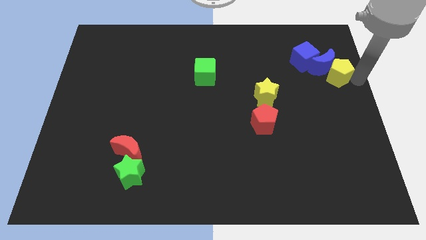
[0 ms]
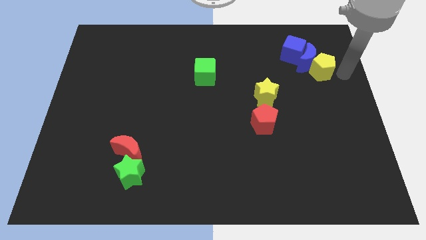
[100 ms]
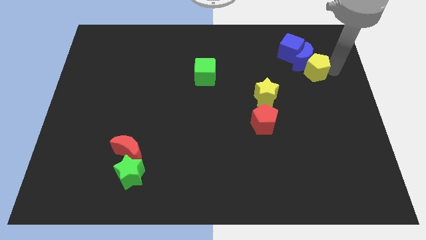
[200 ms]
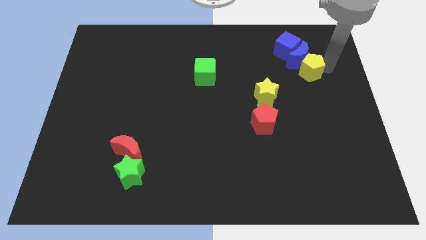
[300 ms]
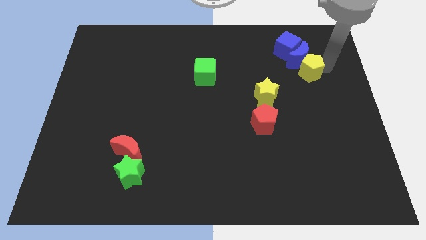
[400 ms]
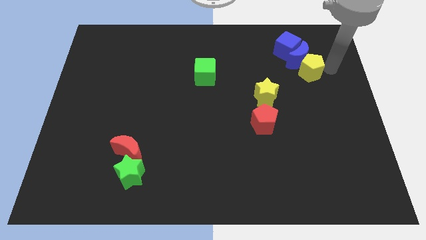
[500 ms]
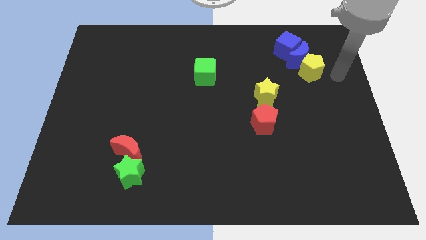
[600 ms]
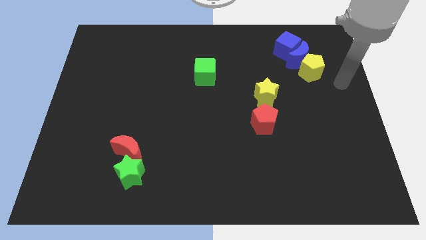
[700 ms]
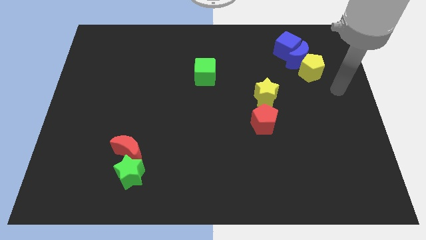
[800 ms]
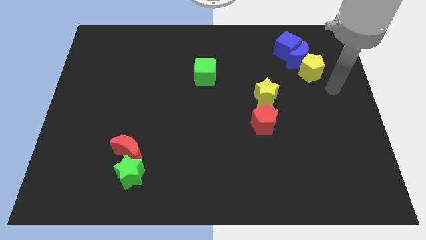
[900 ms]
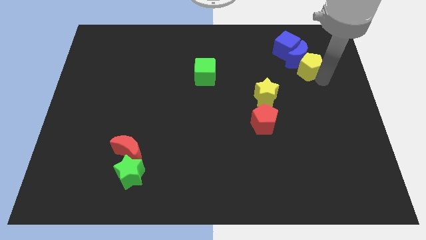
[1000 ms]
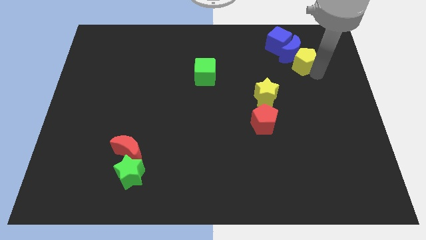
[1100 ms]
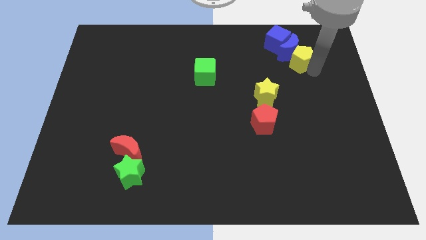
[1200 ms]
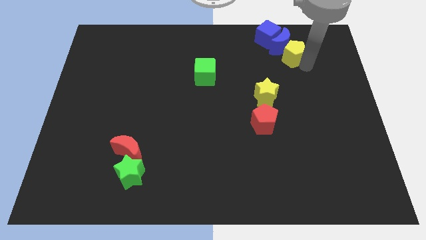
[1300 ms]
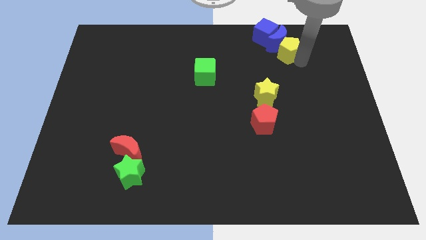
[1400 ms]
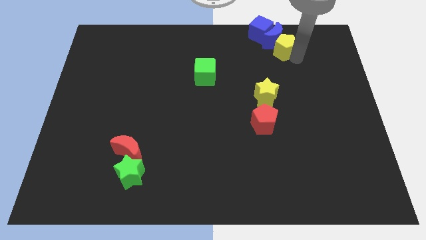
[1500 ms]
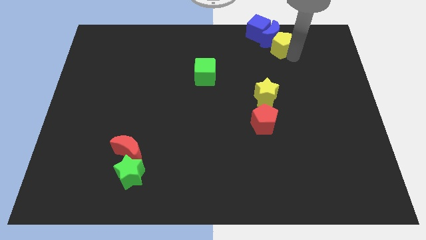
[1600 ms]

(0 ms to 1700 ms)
push the yellow pentagon into the blue crescent and blue cube towards the top

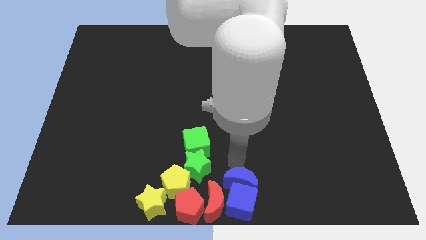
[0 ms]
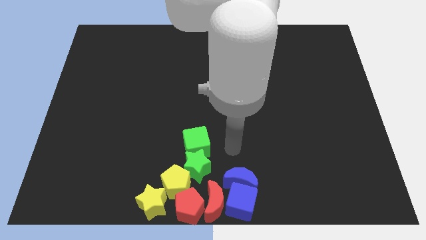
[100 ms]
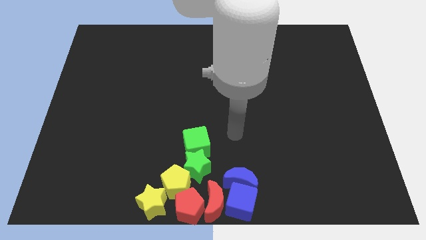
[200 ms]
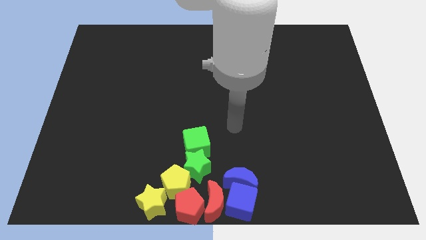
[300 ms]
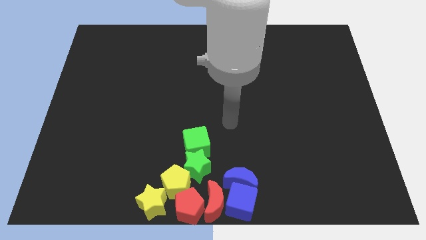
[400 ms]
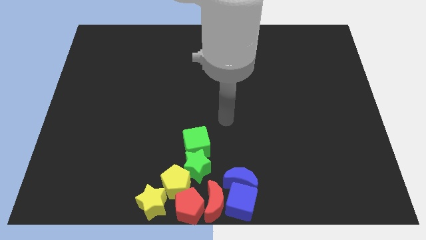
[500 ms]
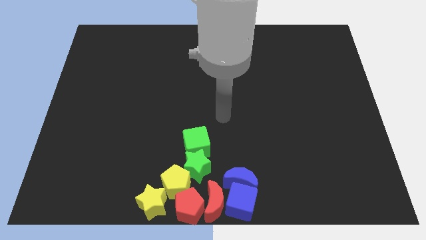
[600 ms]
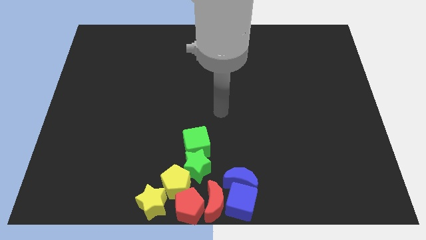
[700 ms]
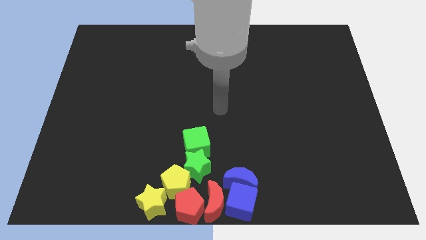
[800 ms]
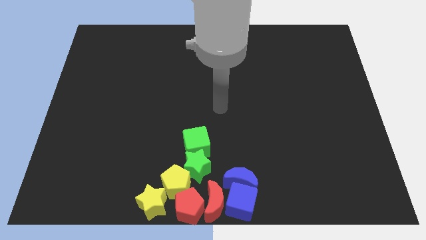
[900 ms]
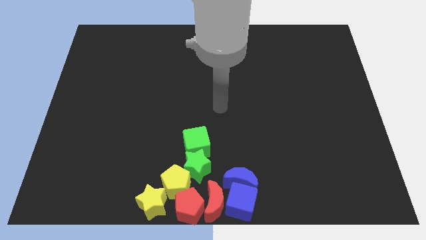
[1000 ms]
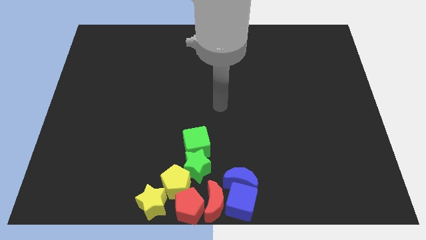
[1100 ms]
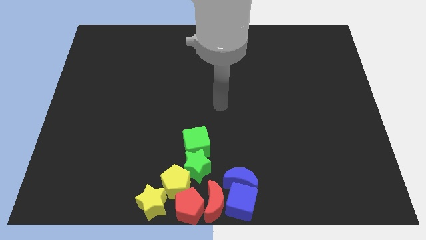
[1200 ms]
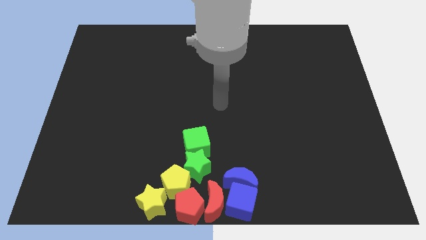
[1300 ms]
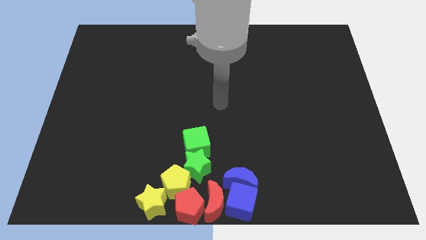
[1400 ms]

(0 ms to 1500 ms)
point your hand at the center of the board

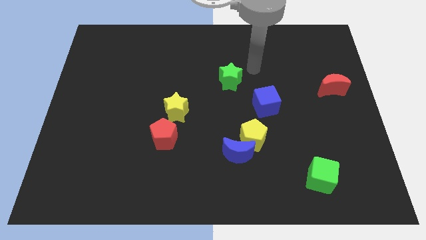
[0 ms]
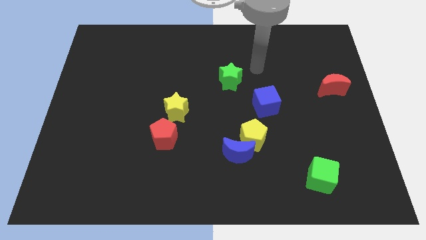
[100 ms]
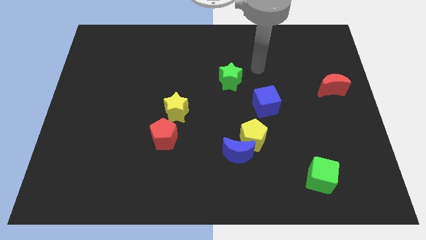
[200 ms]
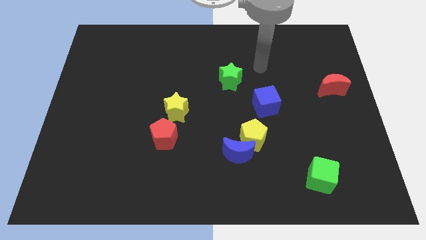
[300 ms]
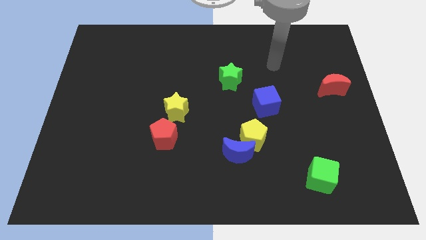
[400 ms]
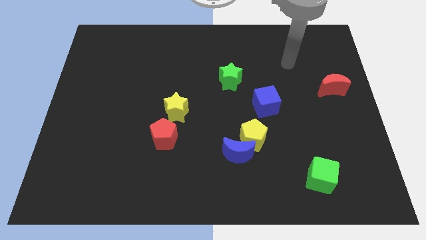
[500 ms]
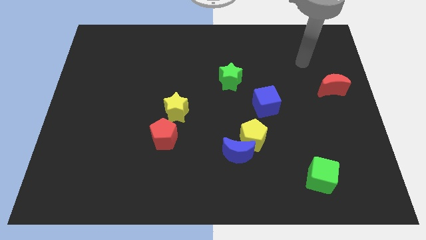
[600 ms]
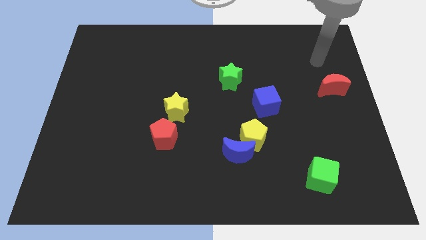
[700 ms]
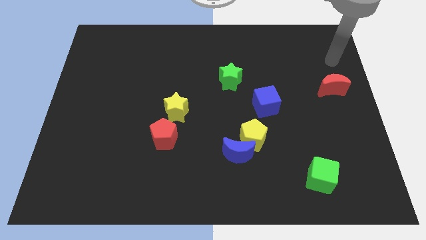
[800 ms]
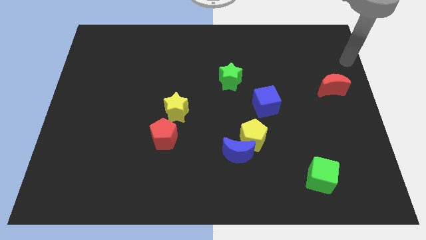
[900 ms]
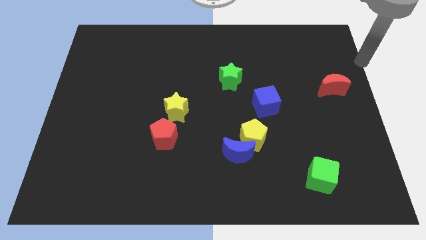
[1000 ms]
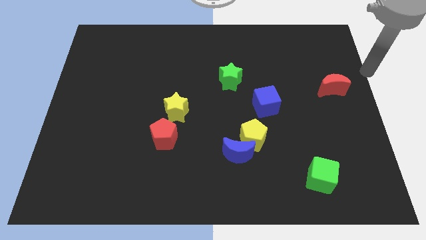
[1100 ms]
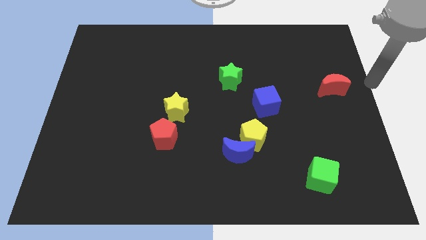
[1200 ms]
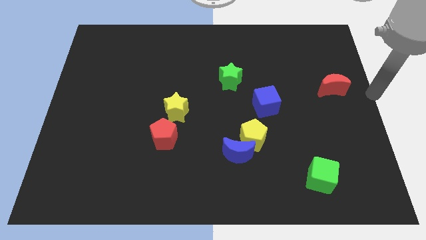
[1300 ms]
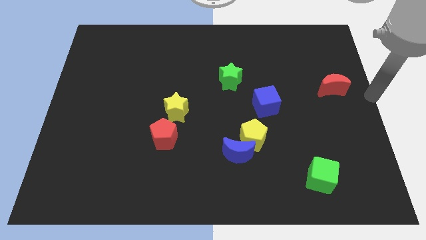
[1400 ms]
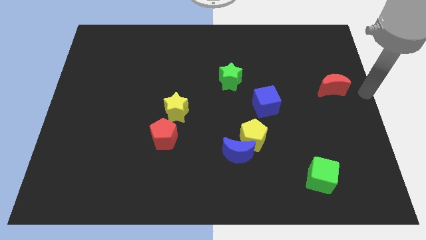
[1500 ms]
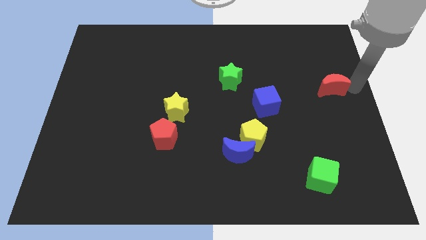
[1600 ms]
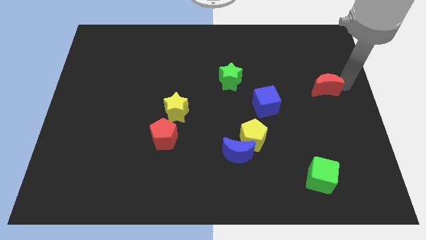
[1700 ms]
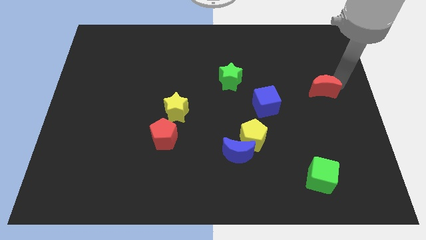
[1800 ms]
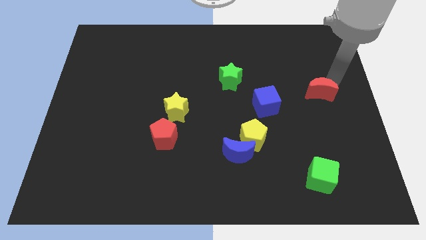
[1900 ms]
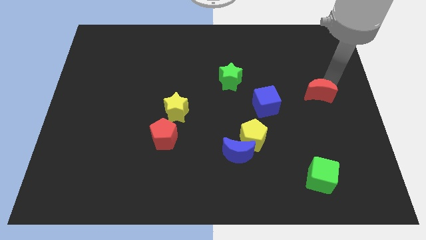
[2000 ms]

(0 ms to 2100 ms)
move the red crescent vertically above the green cube

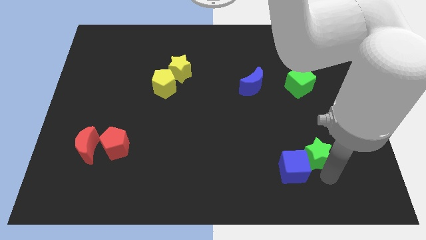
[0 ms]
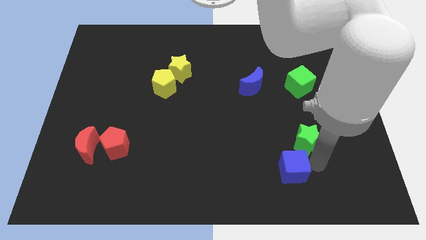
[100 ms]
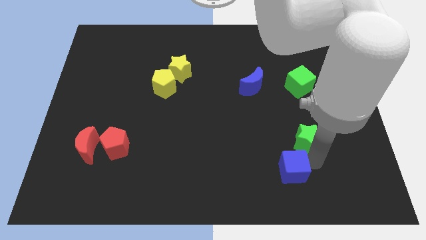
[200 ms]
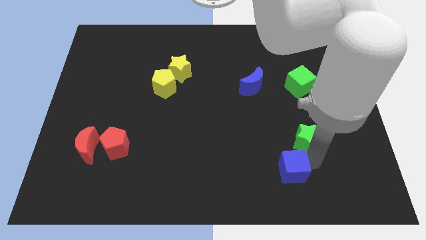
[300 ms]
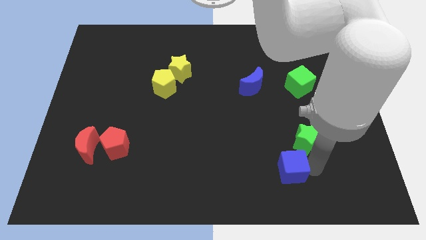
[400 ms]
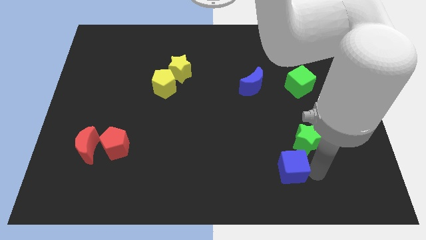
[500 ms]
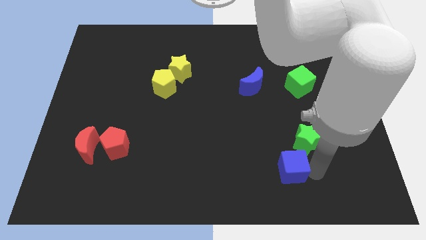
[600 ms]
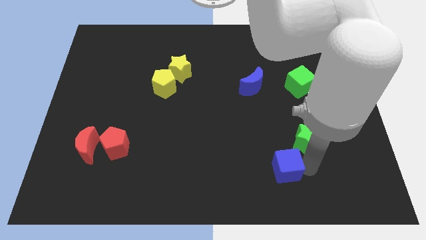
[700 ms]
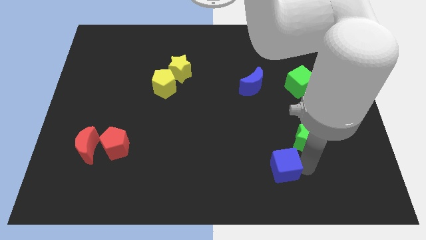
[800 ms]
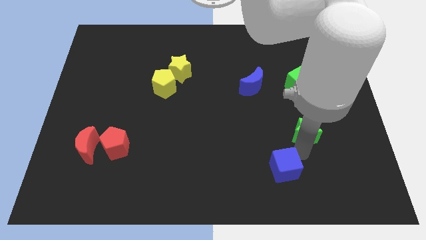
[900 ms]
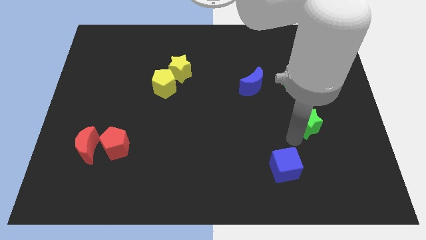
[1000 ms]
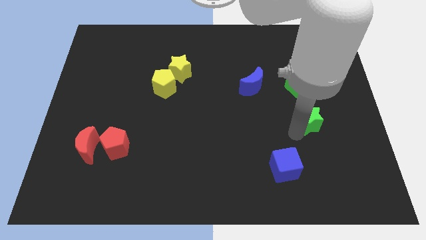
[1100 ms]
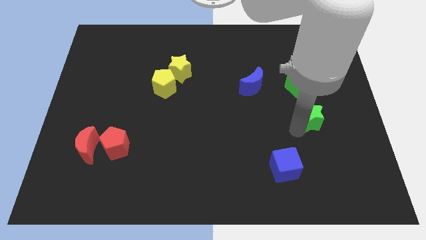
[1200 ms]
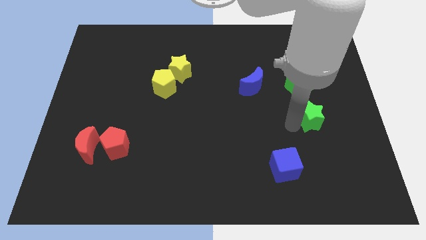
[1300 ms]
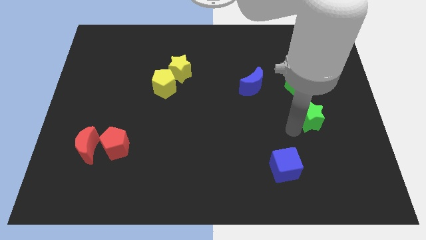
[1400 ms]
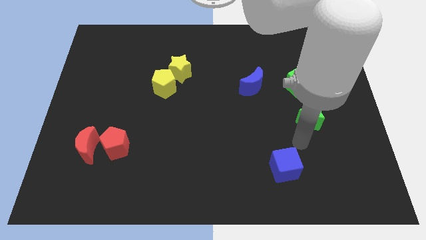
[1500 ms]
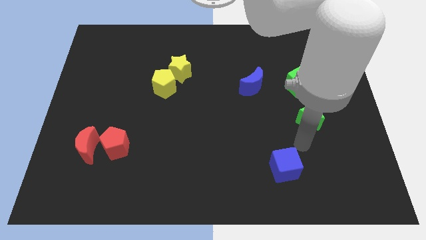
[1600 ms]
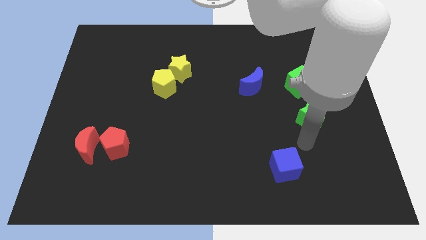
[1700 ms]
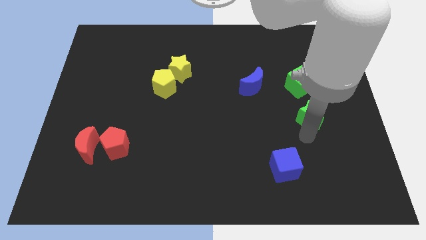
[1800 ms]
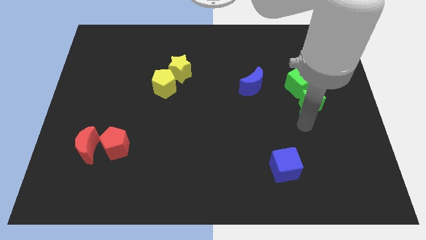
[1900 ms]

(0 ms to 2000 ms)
move green star towards green cube

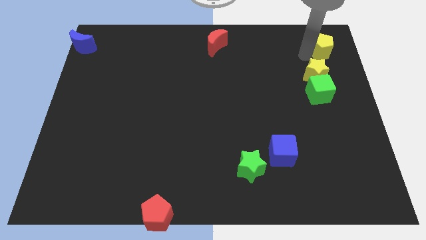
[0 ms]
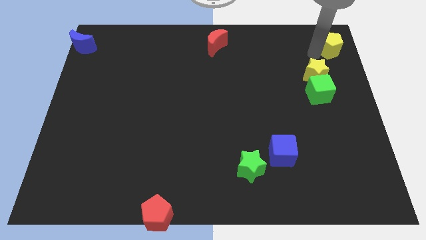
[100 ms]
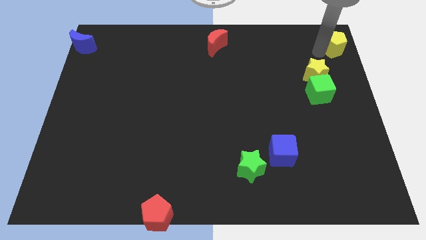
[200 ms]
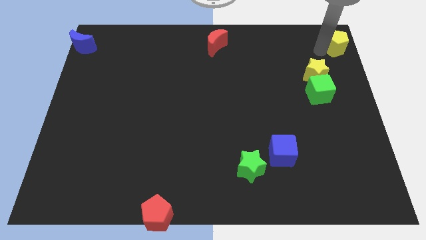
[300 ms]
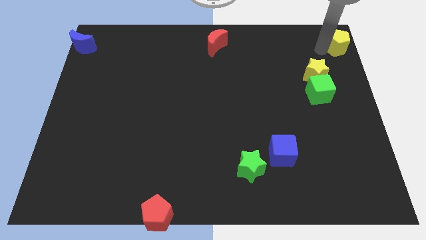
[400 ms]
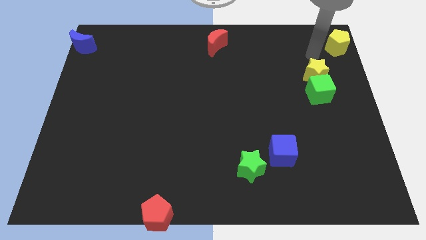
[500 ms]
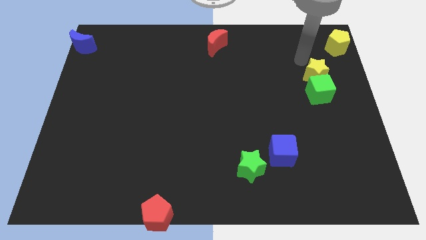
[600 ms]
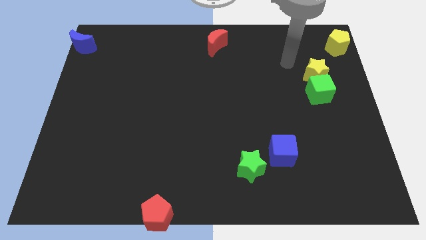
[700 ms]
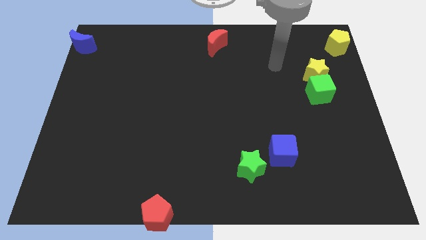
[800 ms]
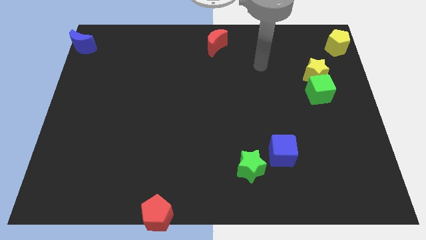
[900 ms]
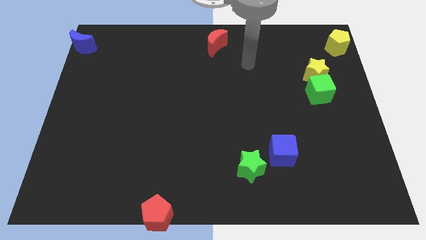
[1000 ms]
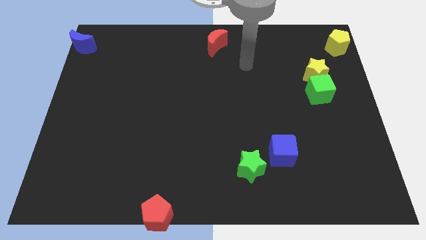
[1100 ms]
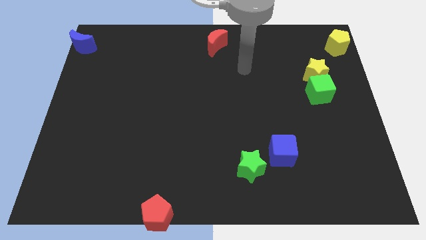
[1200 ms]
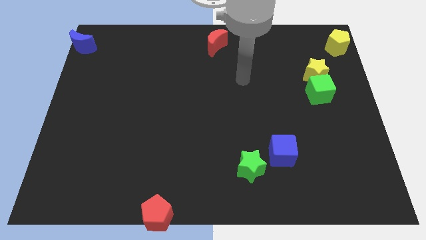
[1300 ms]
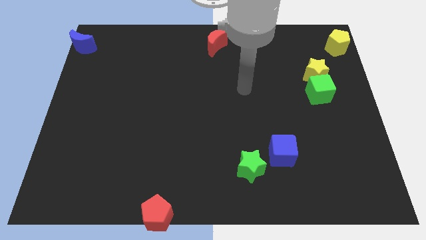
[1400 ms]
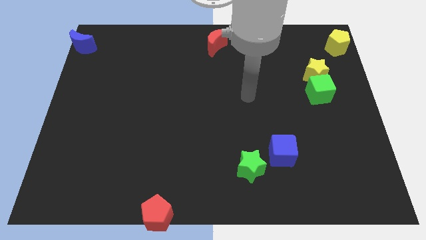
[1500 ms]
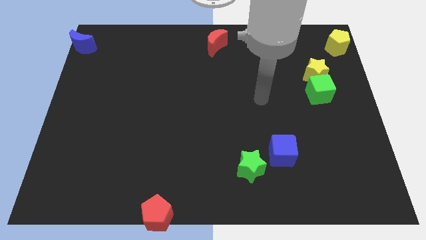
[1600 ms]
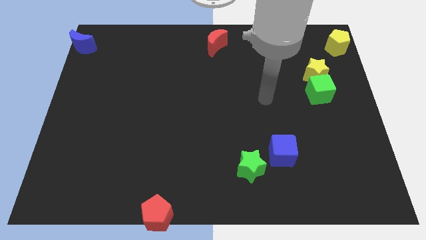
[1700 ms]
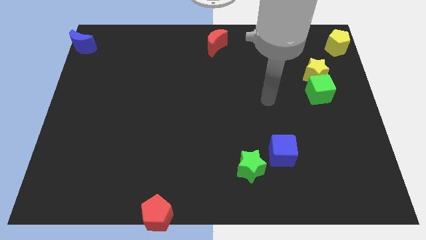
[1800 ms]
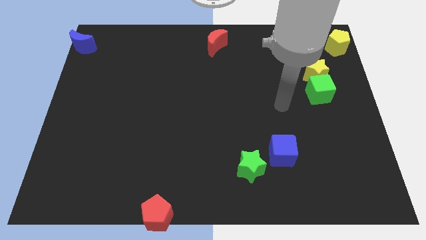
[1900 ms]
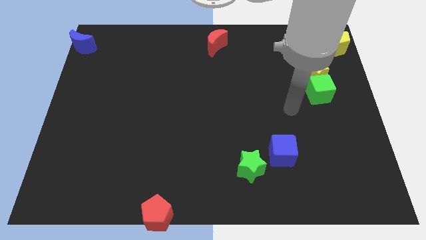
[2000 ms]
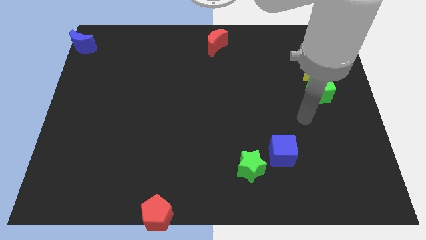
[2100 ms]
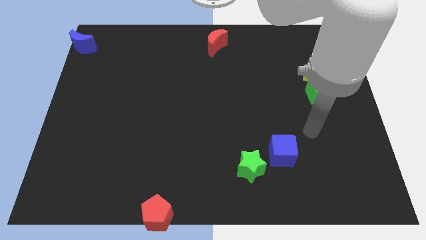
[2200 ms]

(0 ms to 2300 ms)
push the yellow pentagon towards the top right corner of the board
